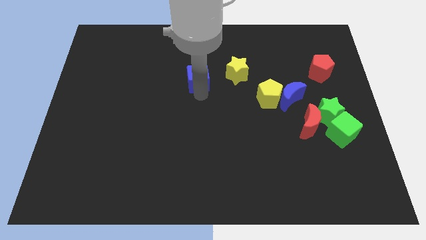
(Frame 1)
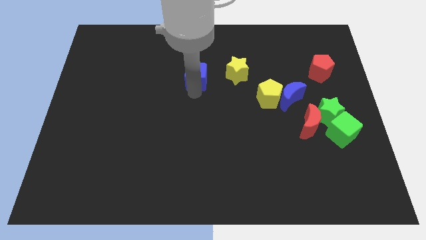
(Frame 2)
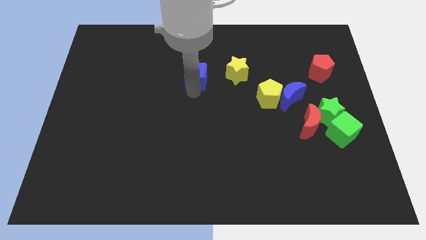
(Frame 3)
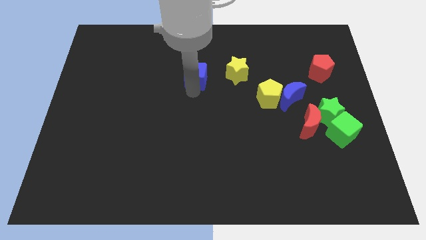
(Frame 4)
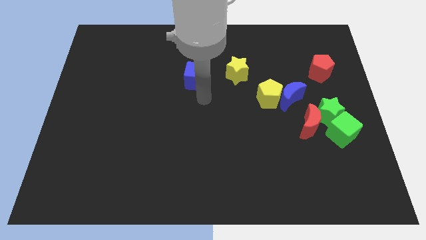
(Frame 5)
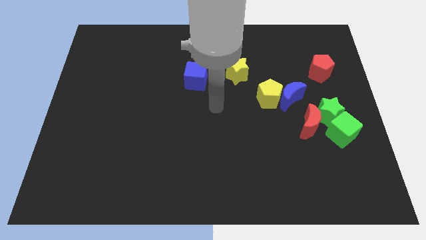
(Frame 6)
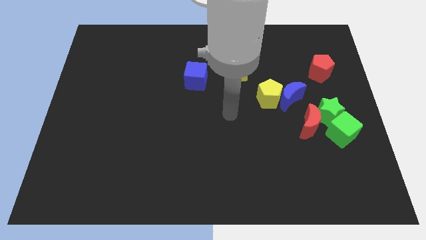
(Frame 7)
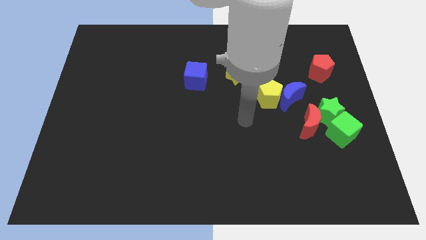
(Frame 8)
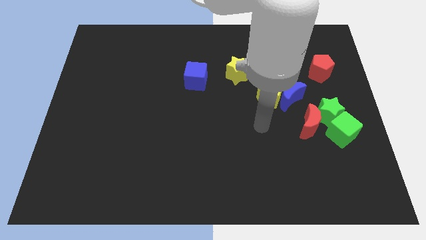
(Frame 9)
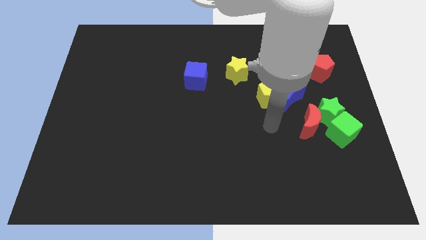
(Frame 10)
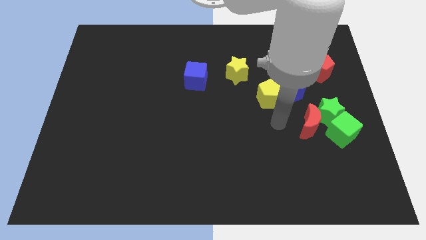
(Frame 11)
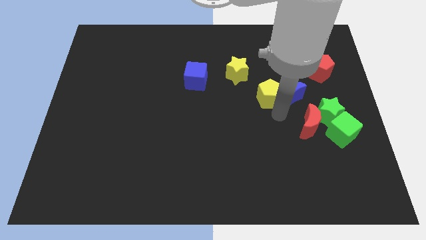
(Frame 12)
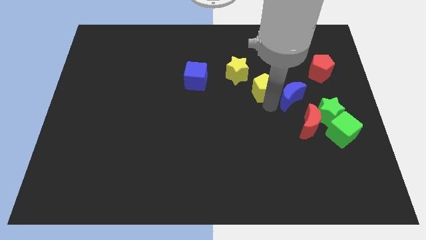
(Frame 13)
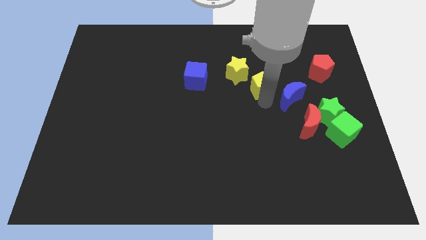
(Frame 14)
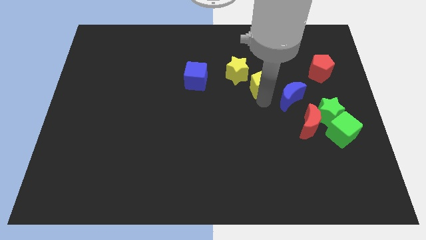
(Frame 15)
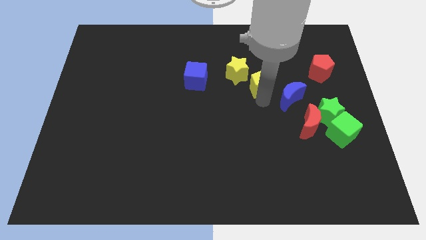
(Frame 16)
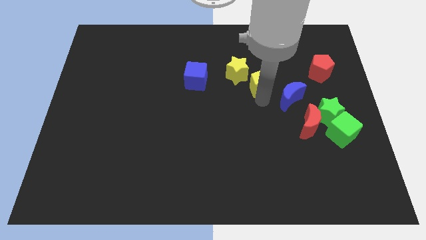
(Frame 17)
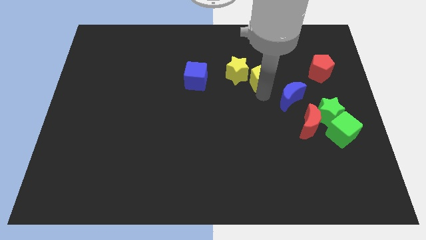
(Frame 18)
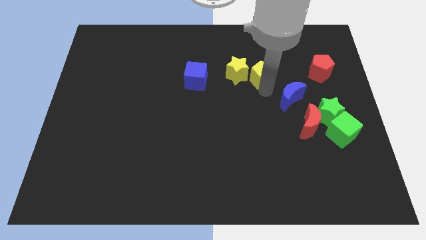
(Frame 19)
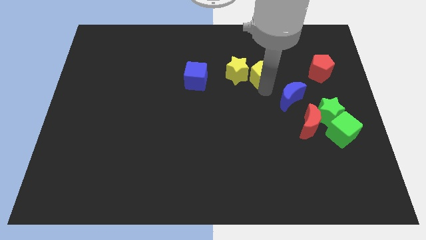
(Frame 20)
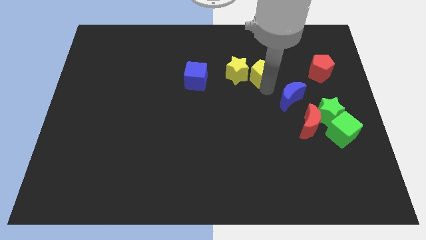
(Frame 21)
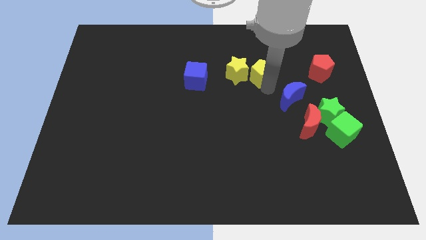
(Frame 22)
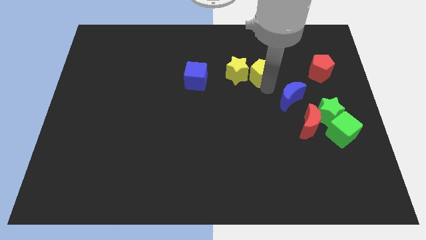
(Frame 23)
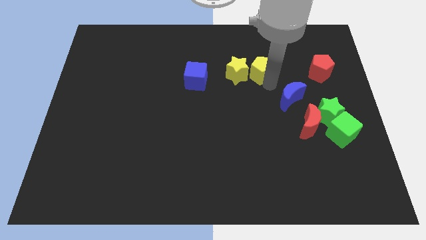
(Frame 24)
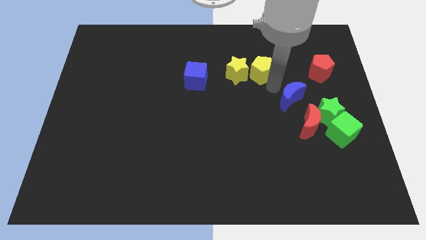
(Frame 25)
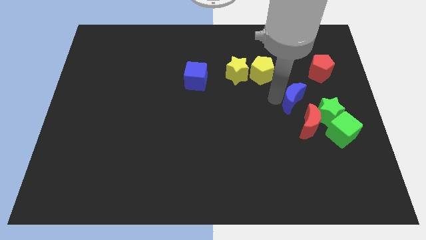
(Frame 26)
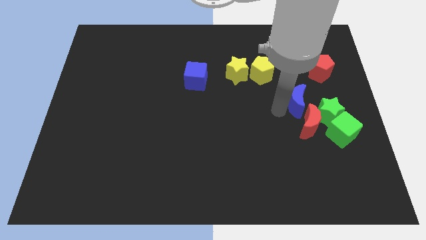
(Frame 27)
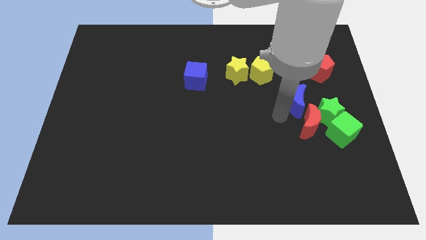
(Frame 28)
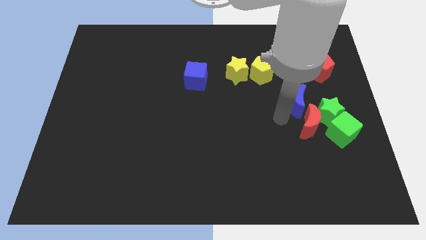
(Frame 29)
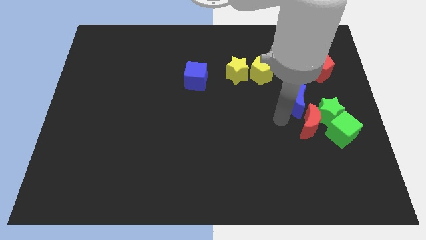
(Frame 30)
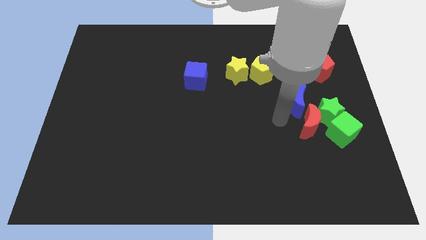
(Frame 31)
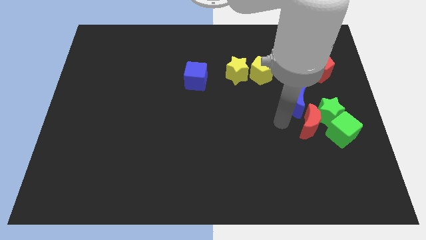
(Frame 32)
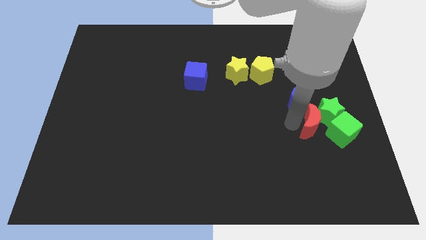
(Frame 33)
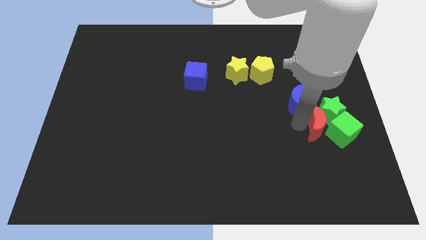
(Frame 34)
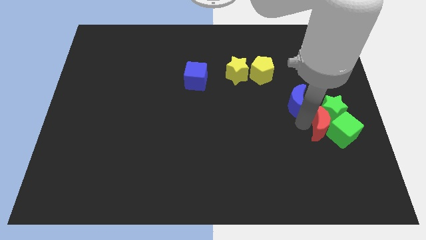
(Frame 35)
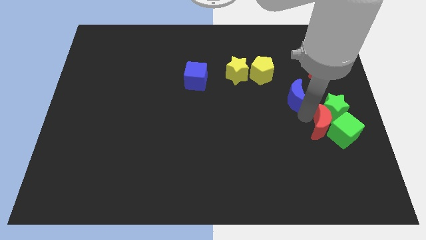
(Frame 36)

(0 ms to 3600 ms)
separate the yellow pentagon from the blue crescent

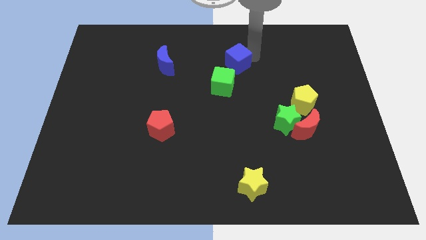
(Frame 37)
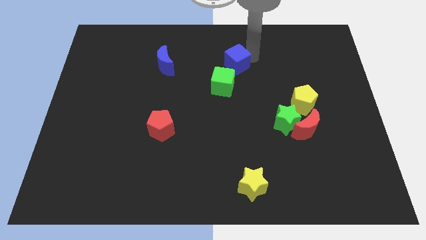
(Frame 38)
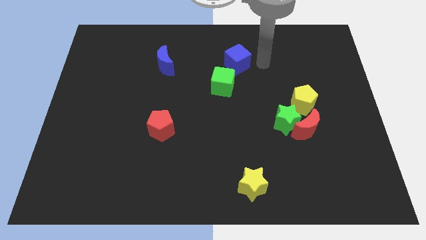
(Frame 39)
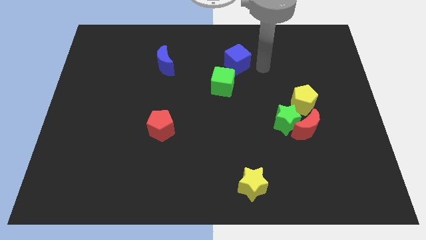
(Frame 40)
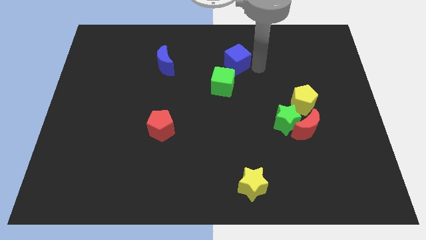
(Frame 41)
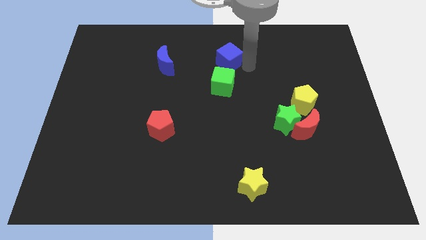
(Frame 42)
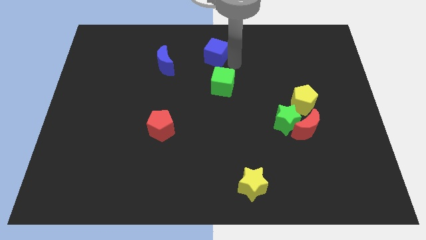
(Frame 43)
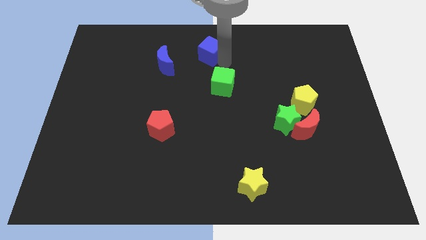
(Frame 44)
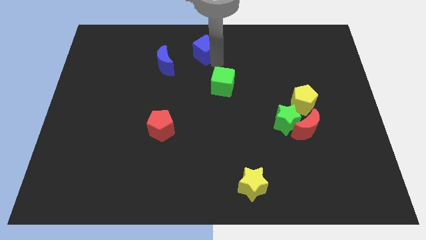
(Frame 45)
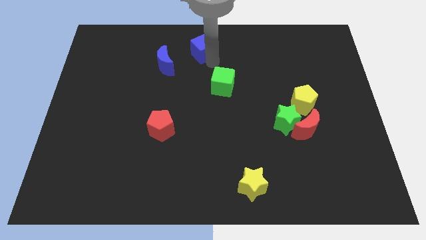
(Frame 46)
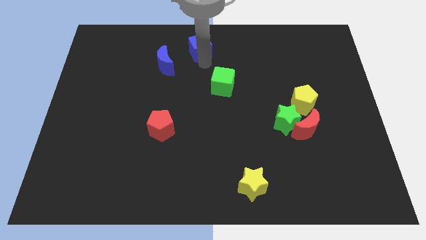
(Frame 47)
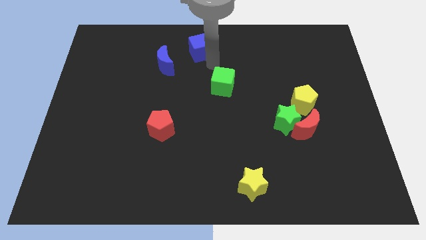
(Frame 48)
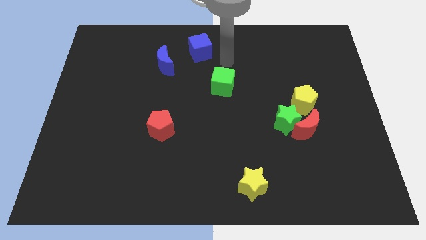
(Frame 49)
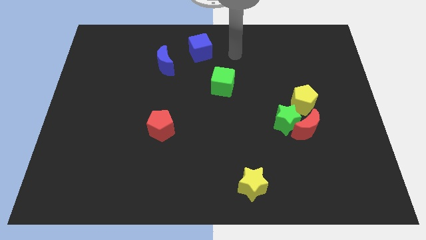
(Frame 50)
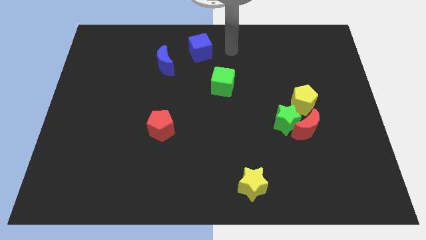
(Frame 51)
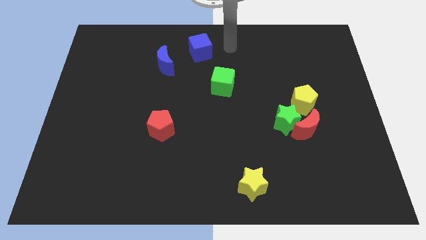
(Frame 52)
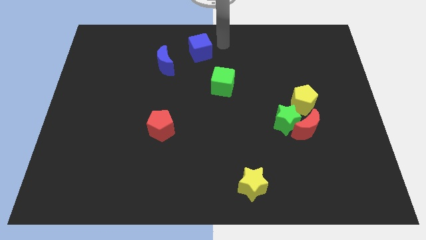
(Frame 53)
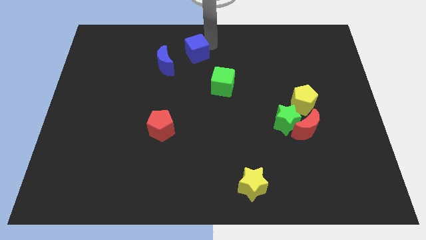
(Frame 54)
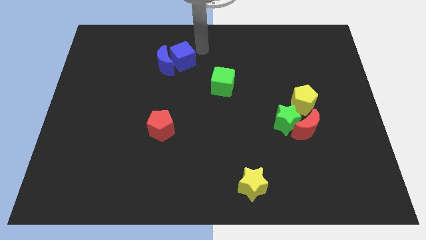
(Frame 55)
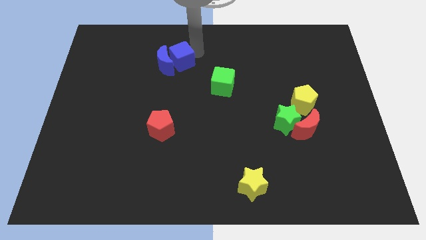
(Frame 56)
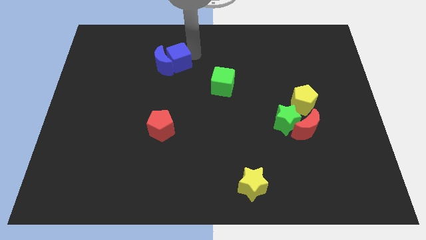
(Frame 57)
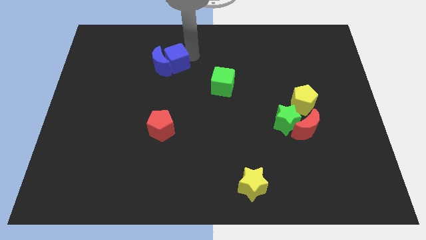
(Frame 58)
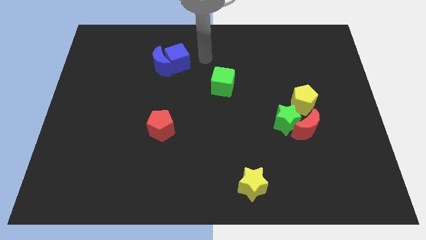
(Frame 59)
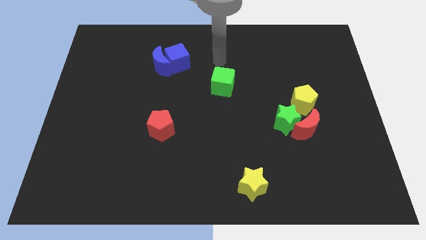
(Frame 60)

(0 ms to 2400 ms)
push the blue cube towards the blue moon

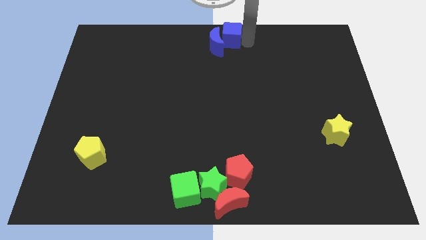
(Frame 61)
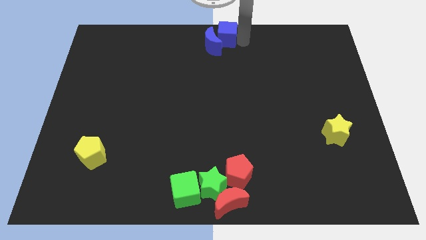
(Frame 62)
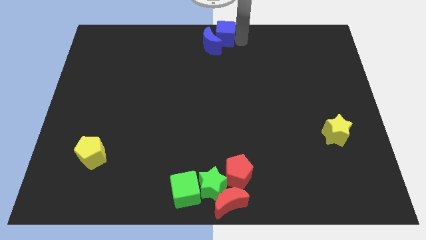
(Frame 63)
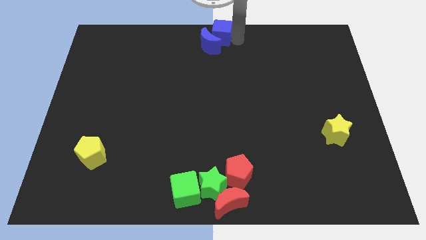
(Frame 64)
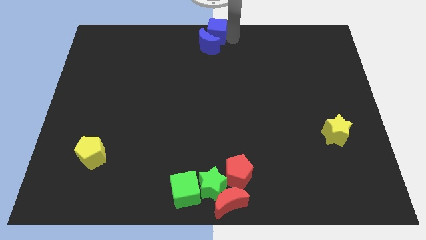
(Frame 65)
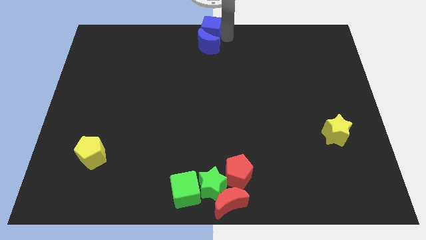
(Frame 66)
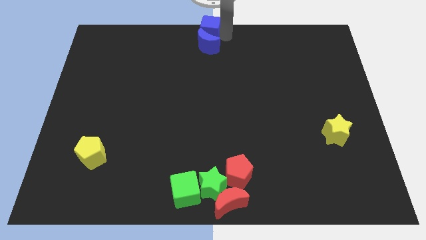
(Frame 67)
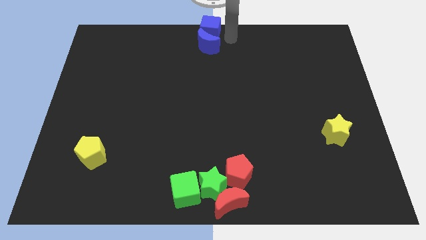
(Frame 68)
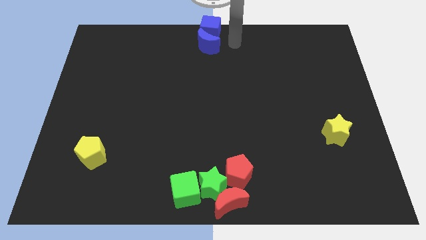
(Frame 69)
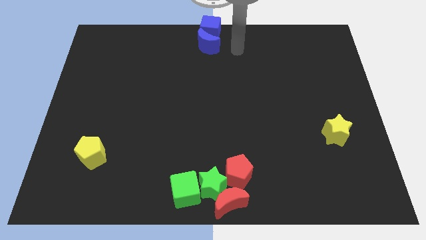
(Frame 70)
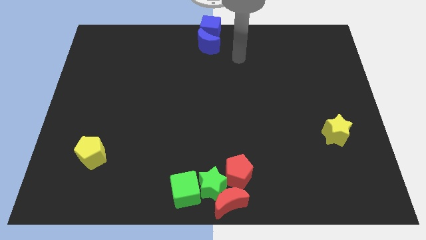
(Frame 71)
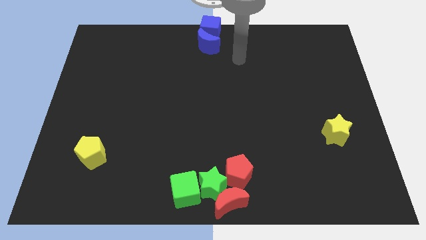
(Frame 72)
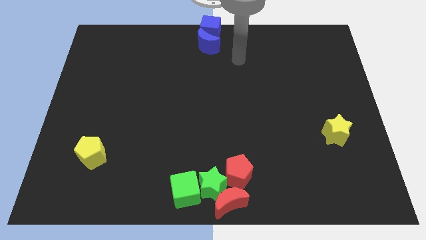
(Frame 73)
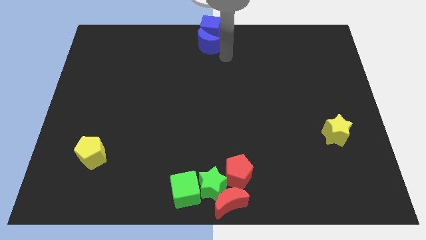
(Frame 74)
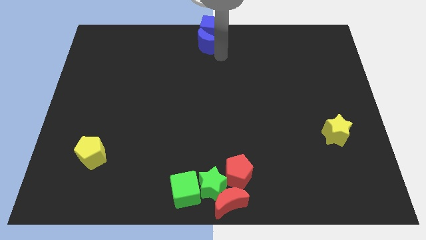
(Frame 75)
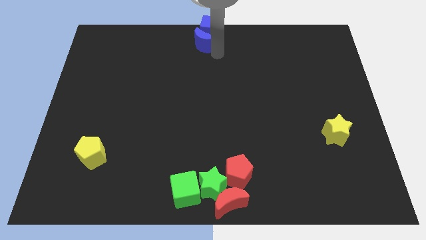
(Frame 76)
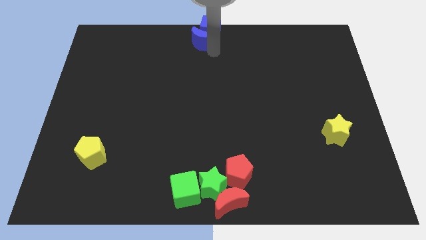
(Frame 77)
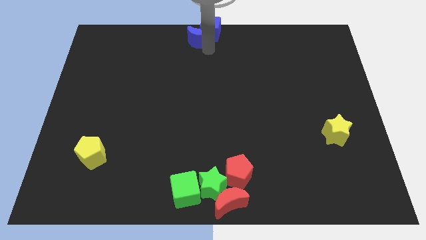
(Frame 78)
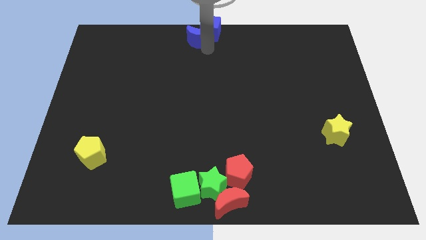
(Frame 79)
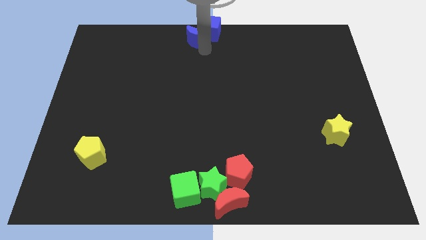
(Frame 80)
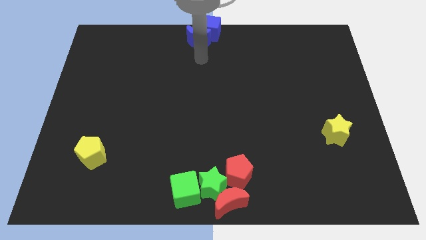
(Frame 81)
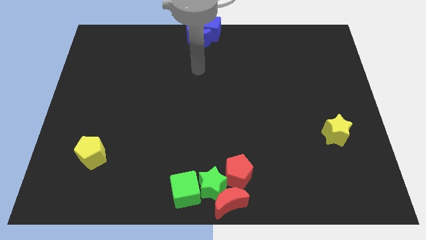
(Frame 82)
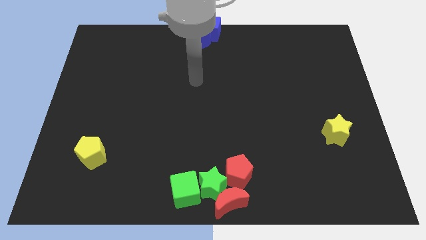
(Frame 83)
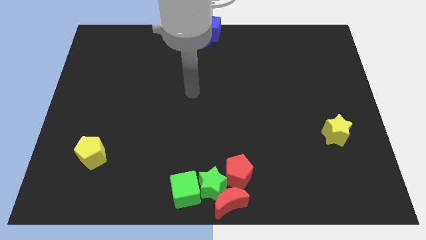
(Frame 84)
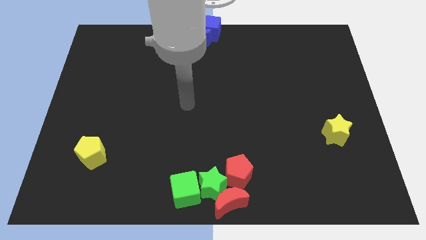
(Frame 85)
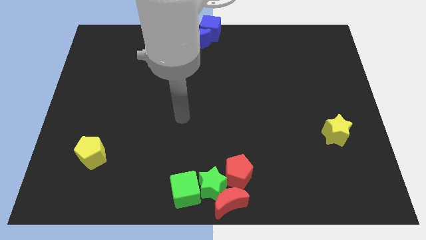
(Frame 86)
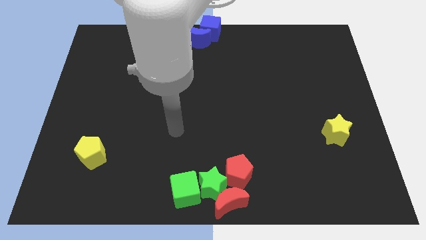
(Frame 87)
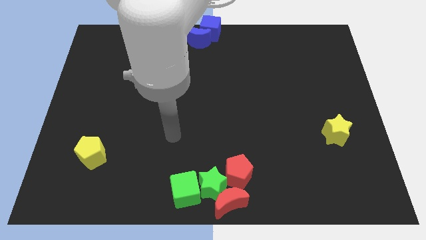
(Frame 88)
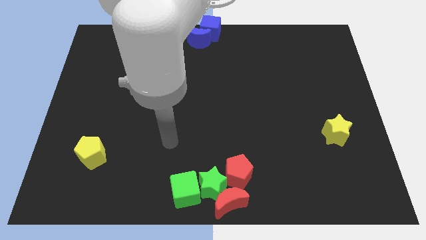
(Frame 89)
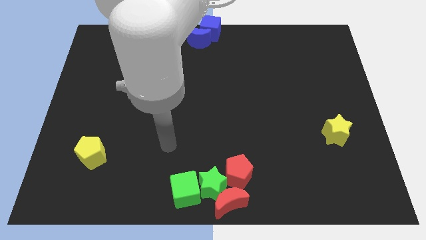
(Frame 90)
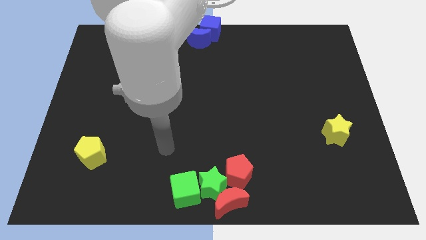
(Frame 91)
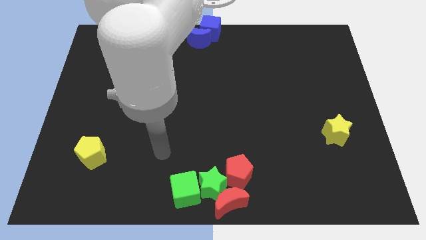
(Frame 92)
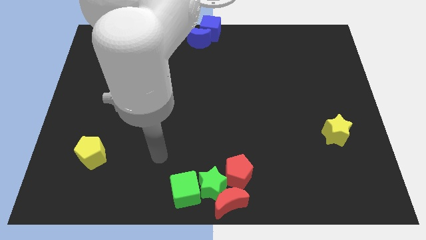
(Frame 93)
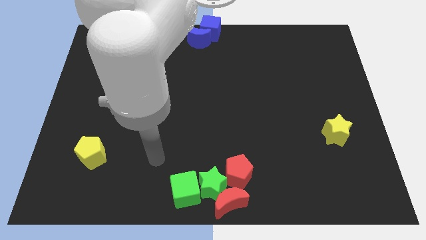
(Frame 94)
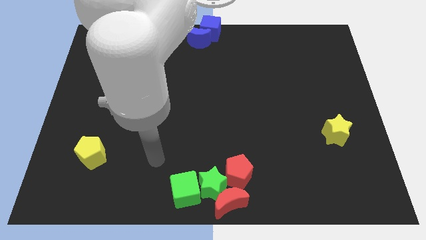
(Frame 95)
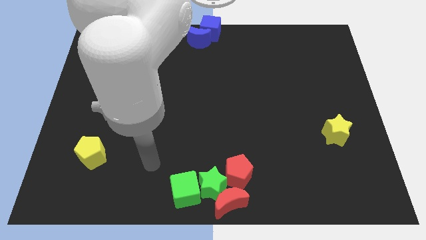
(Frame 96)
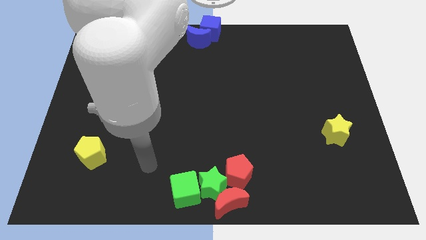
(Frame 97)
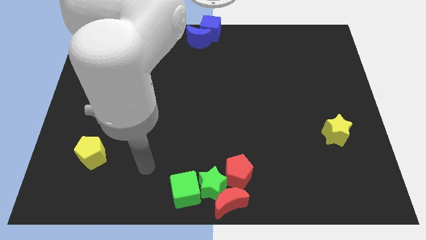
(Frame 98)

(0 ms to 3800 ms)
put the blue moon vertically below the blue cube
